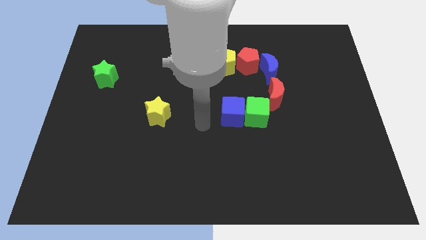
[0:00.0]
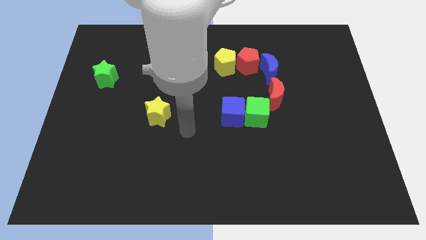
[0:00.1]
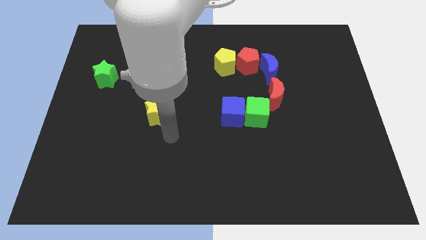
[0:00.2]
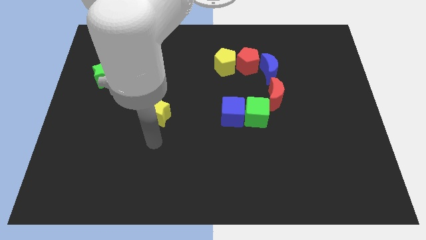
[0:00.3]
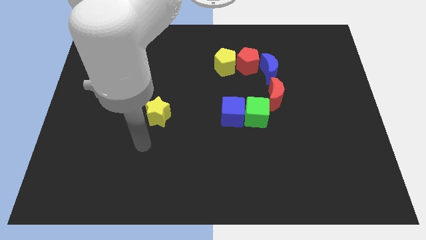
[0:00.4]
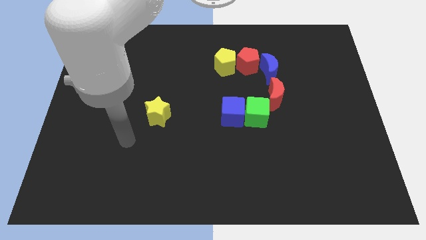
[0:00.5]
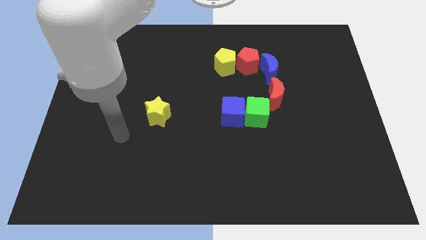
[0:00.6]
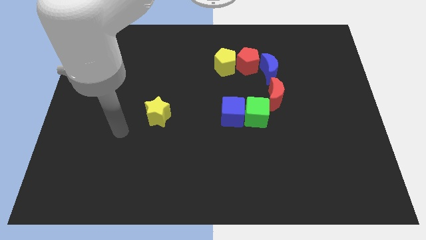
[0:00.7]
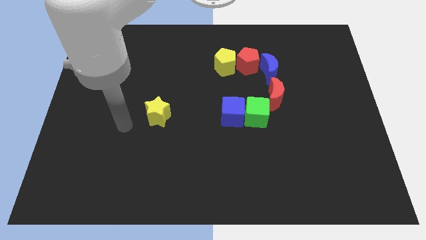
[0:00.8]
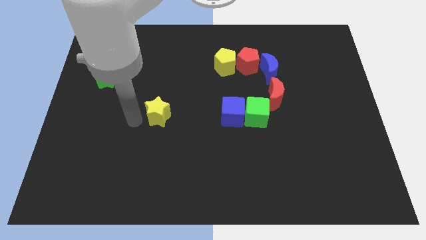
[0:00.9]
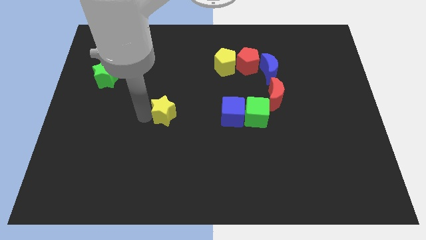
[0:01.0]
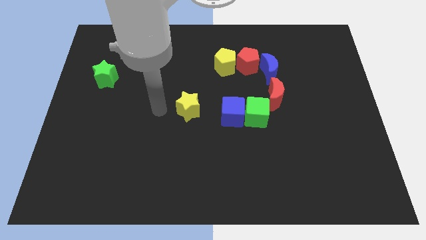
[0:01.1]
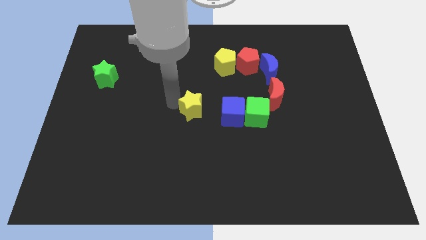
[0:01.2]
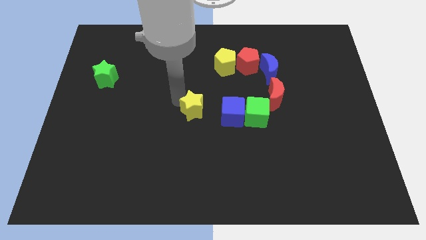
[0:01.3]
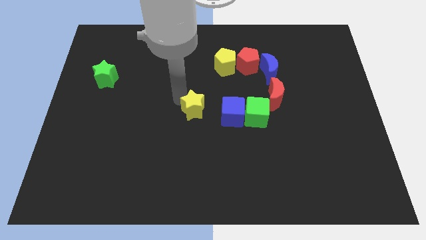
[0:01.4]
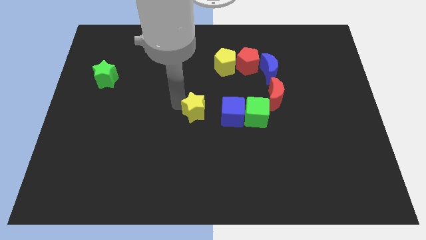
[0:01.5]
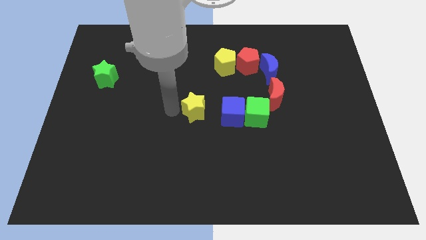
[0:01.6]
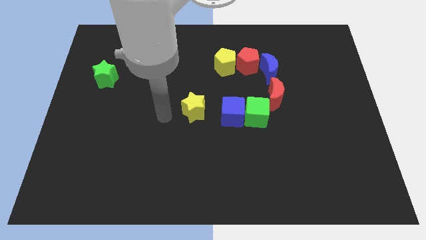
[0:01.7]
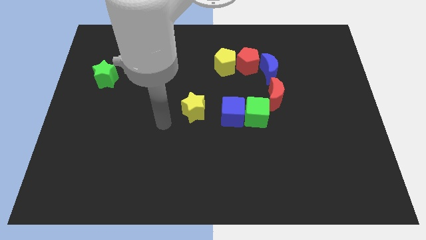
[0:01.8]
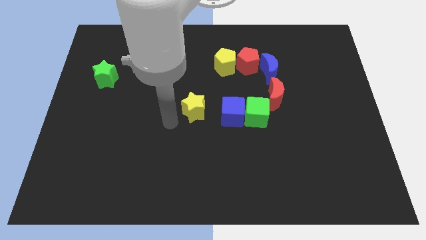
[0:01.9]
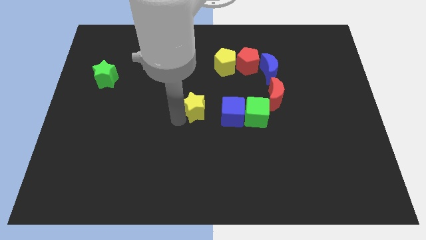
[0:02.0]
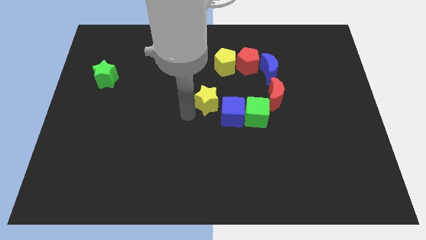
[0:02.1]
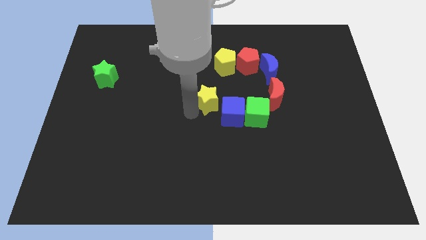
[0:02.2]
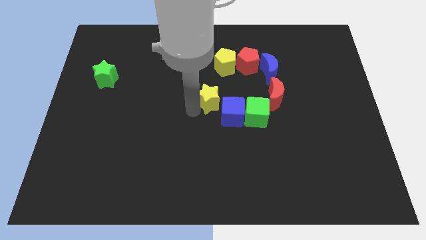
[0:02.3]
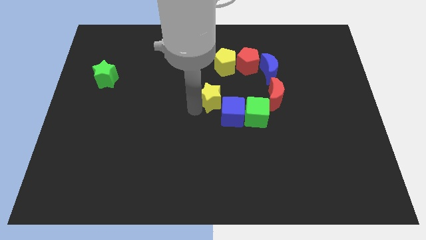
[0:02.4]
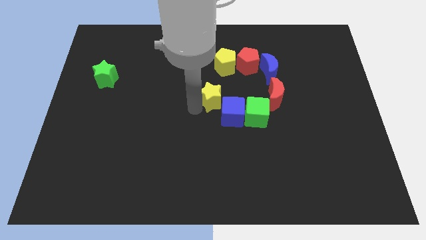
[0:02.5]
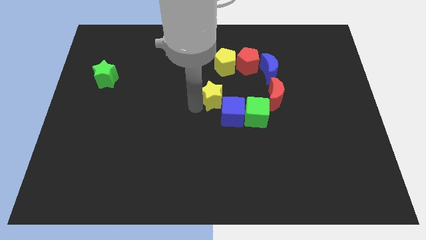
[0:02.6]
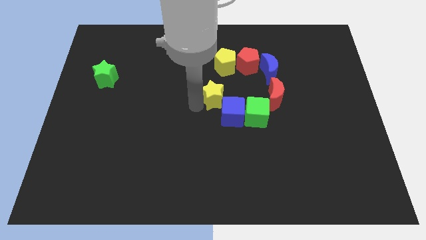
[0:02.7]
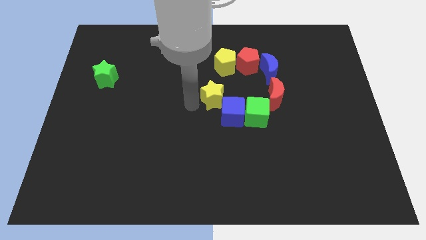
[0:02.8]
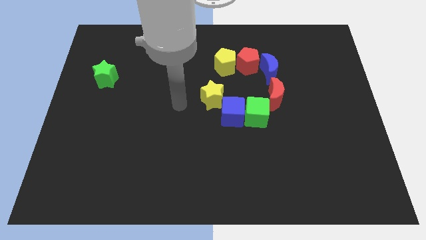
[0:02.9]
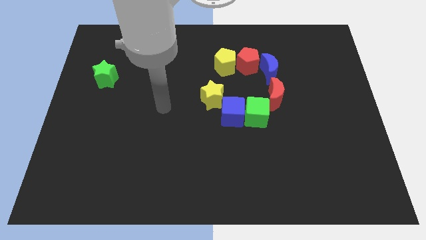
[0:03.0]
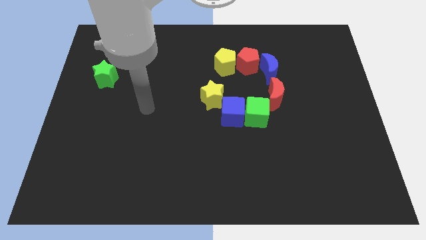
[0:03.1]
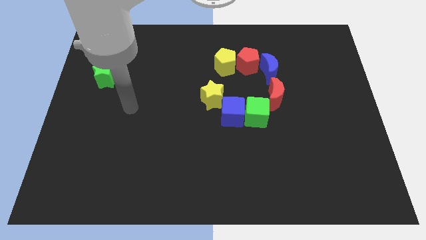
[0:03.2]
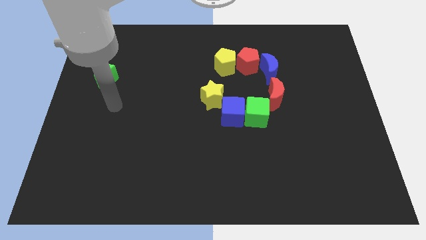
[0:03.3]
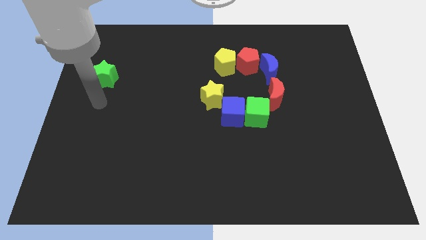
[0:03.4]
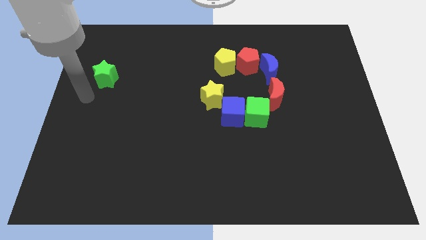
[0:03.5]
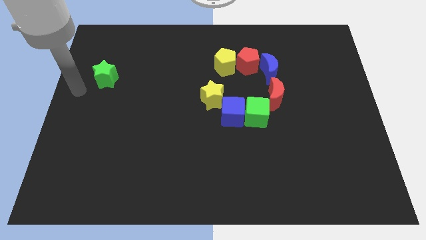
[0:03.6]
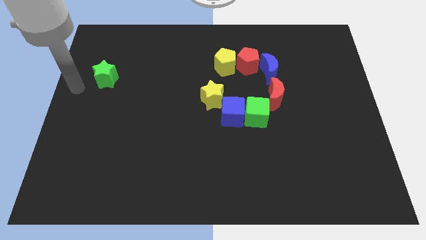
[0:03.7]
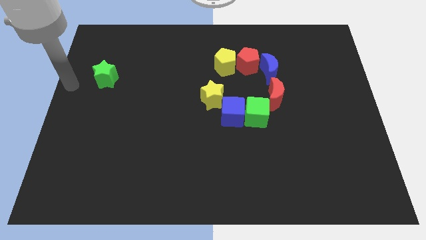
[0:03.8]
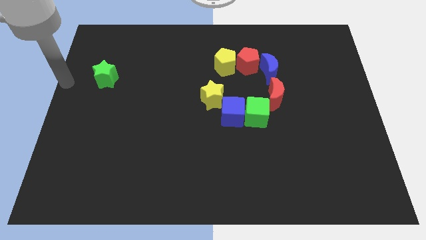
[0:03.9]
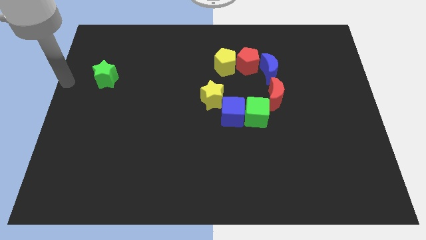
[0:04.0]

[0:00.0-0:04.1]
move the yellow star close to the blue cube

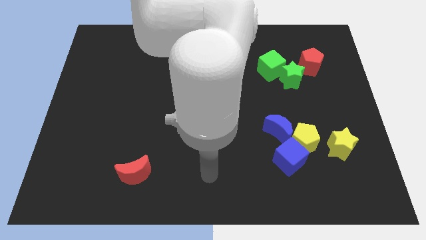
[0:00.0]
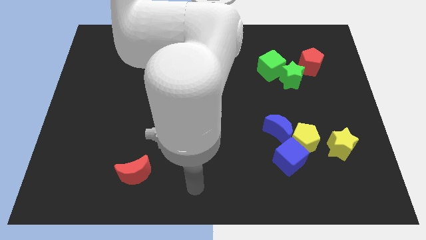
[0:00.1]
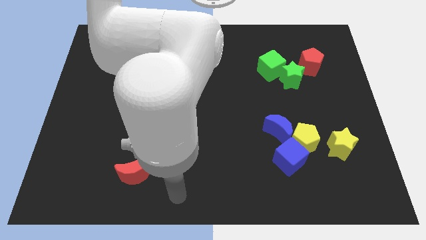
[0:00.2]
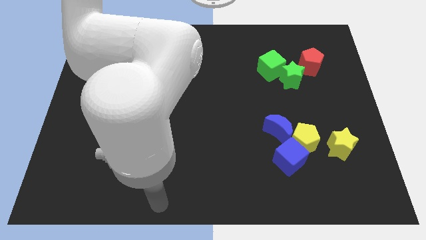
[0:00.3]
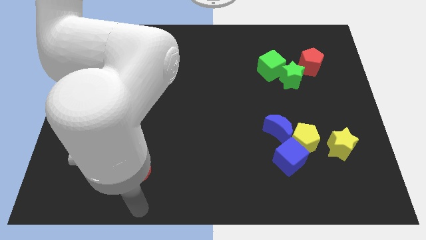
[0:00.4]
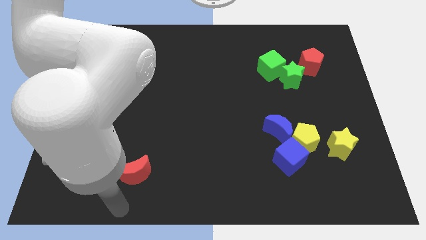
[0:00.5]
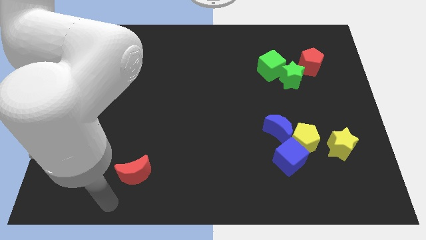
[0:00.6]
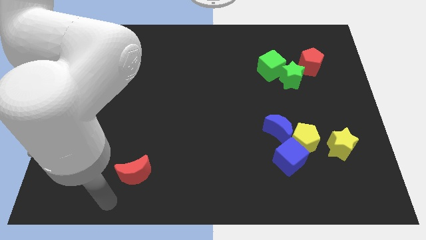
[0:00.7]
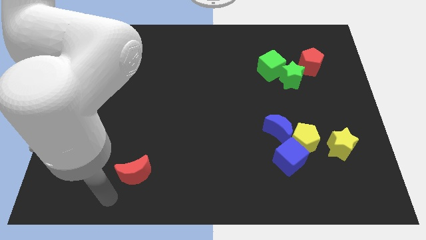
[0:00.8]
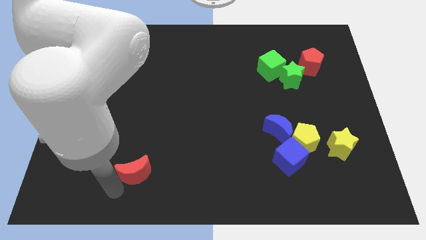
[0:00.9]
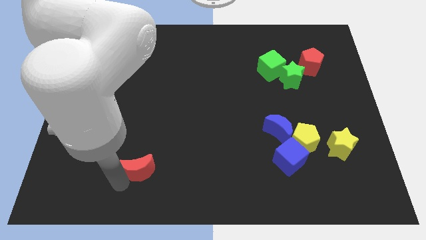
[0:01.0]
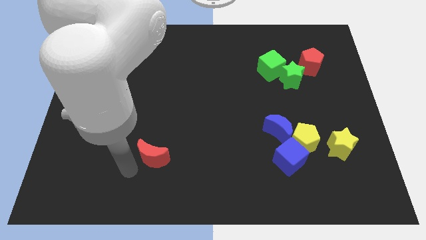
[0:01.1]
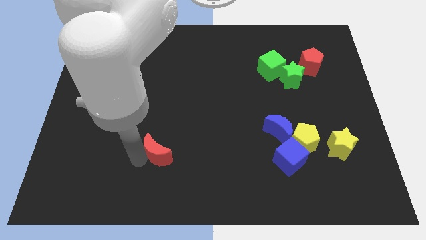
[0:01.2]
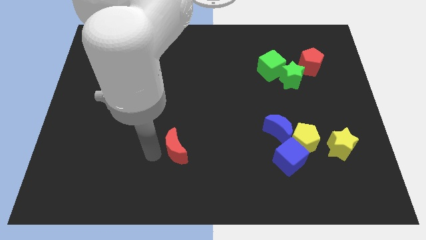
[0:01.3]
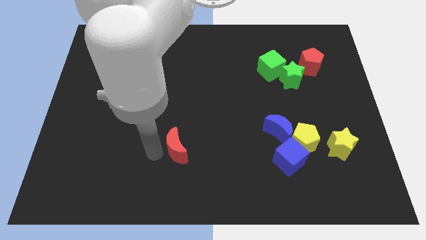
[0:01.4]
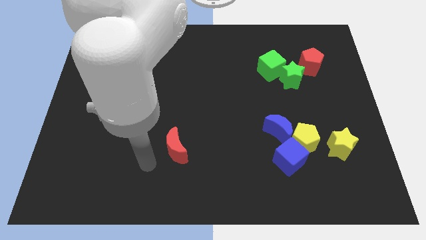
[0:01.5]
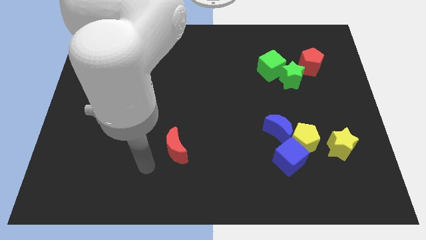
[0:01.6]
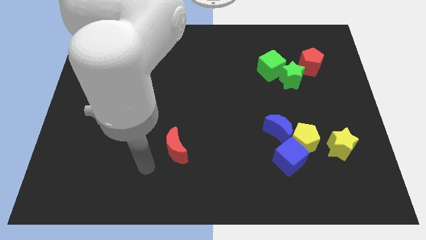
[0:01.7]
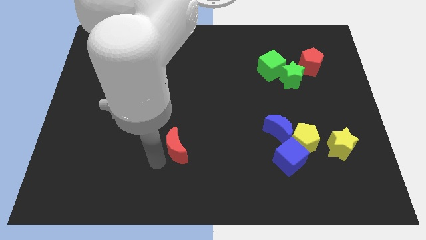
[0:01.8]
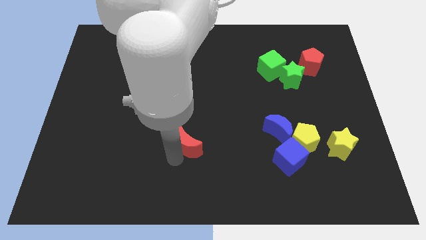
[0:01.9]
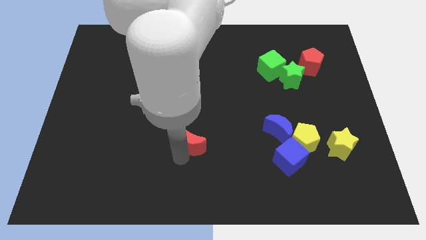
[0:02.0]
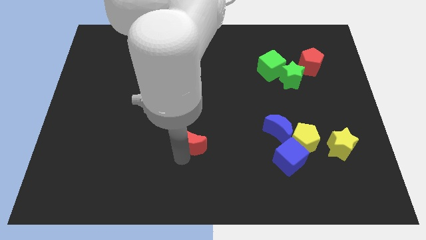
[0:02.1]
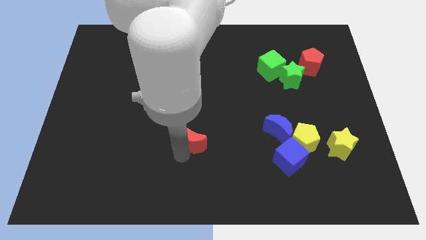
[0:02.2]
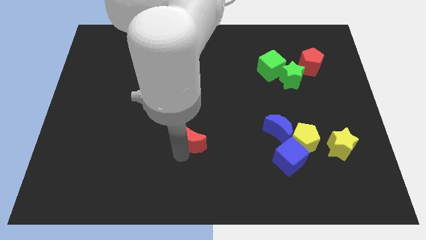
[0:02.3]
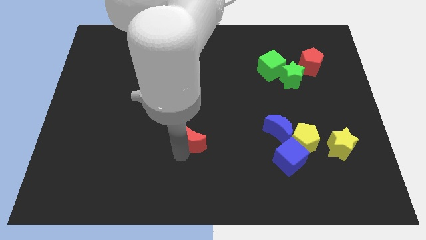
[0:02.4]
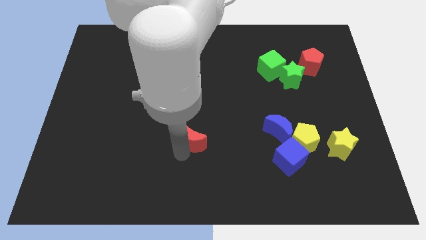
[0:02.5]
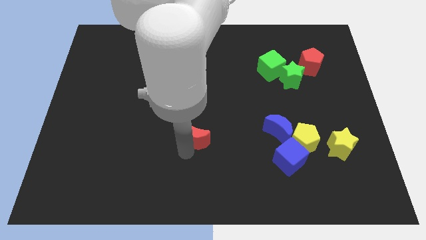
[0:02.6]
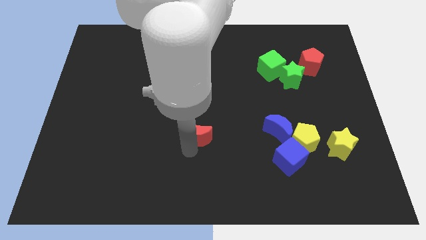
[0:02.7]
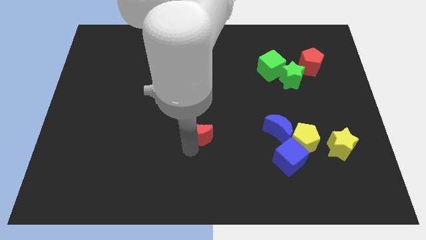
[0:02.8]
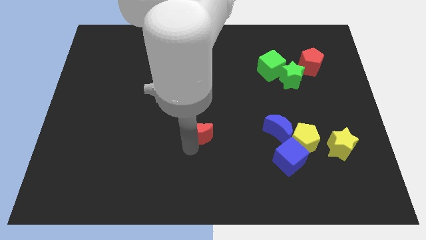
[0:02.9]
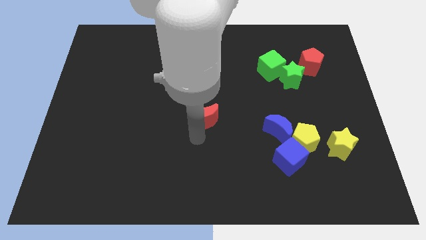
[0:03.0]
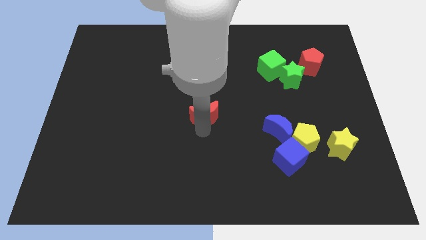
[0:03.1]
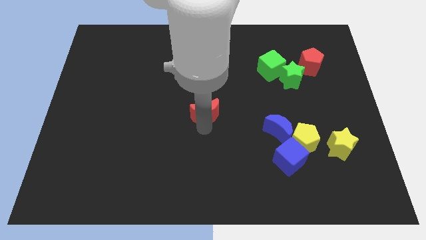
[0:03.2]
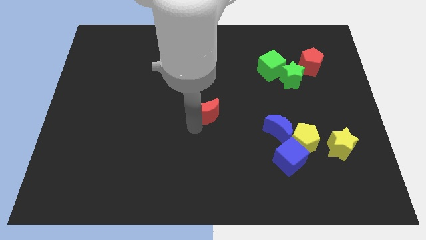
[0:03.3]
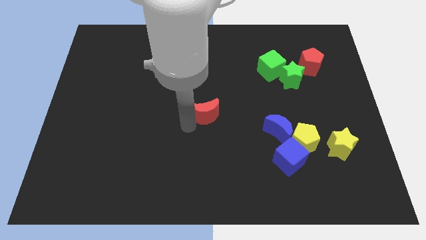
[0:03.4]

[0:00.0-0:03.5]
place the red crescent at the center of the board

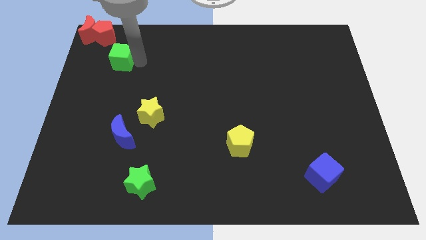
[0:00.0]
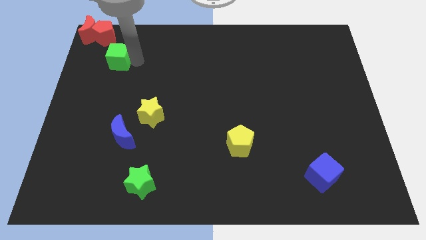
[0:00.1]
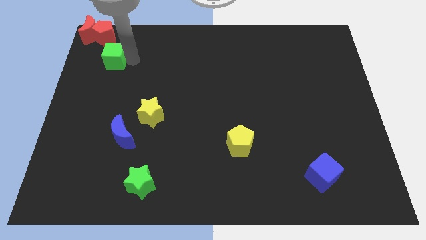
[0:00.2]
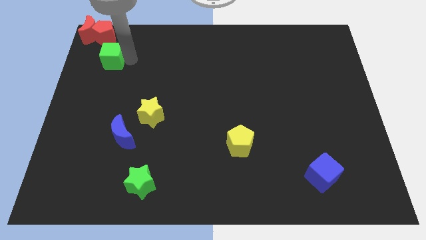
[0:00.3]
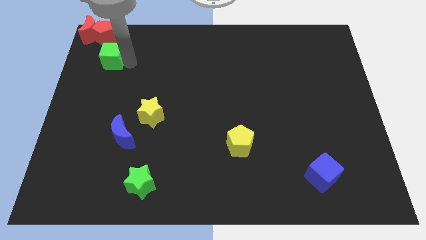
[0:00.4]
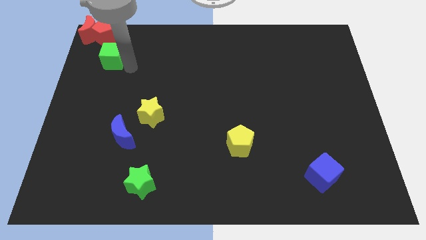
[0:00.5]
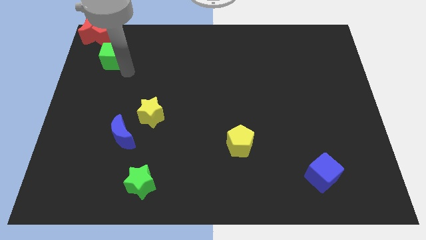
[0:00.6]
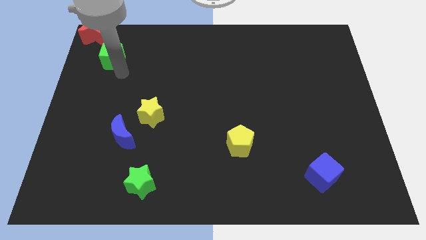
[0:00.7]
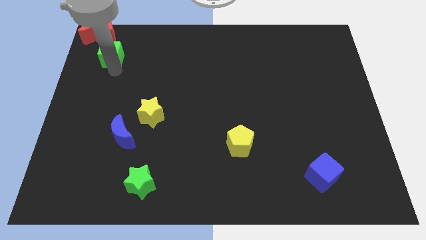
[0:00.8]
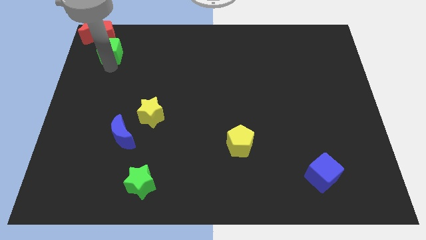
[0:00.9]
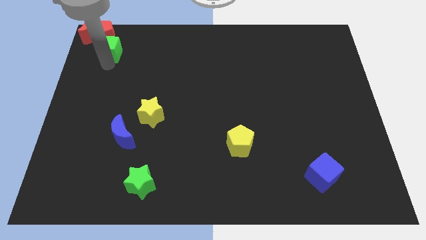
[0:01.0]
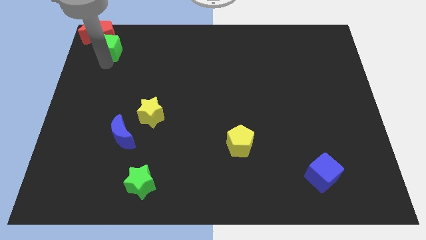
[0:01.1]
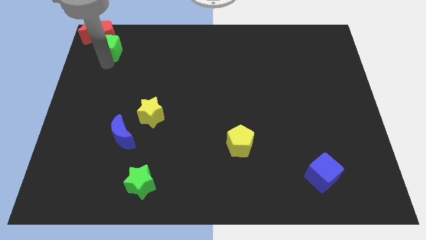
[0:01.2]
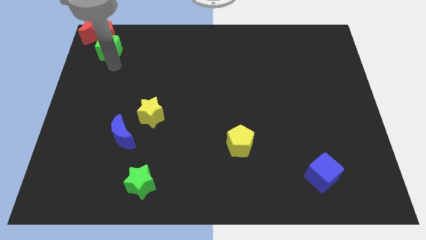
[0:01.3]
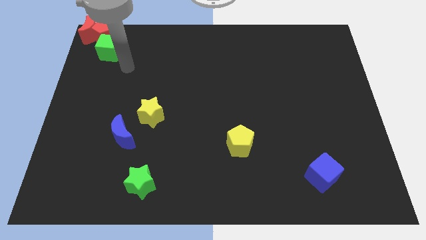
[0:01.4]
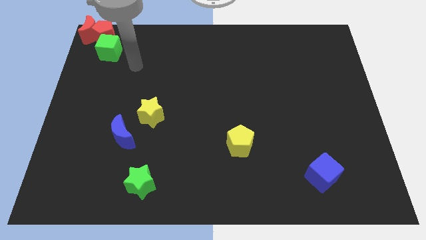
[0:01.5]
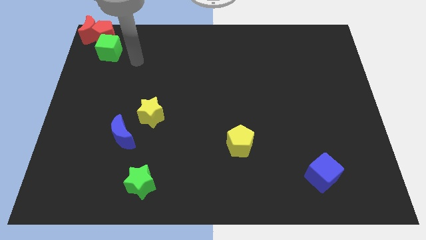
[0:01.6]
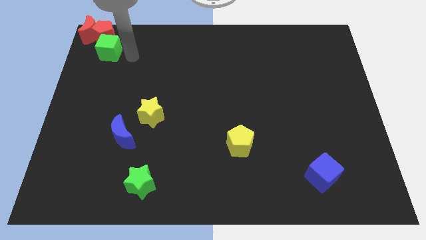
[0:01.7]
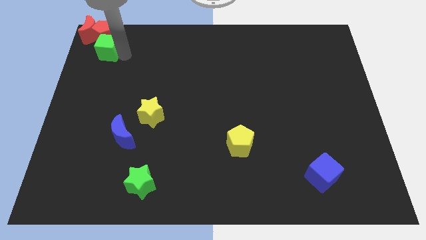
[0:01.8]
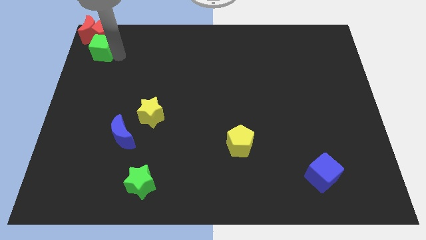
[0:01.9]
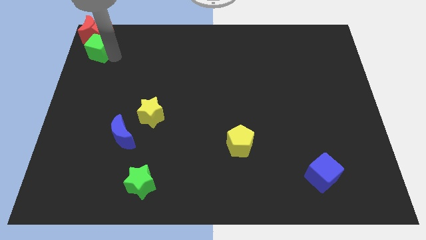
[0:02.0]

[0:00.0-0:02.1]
push the green cube below the red pentagon and red crescent
